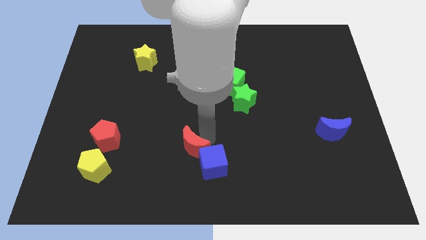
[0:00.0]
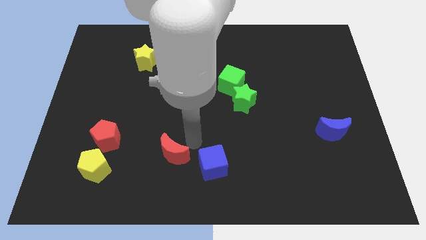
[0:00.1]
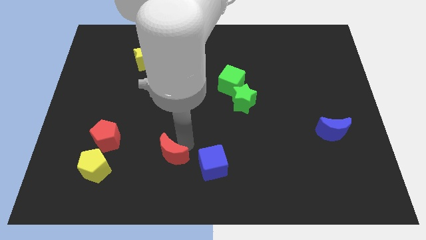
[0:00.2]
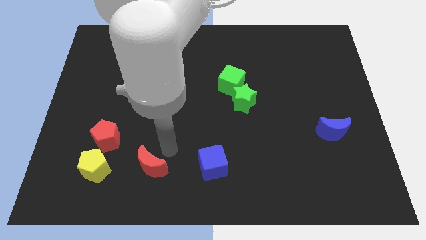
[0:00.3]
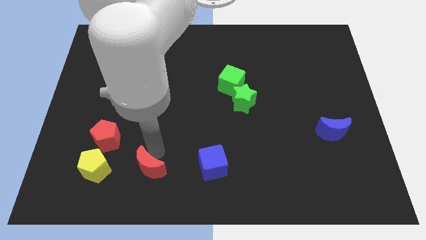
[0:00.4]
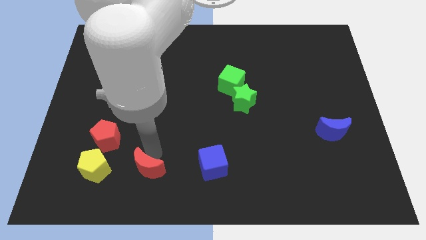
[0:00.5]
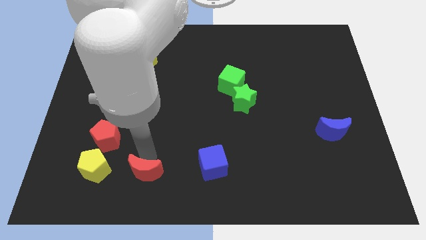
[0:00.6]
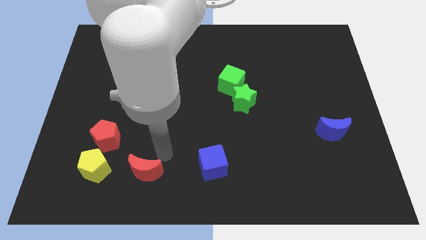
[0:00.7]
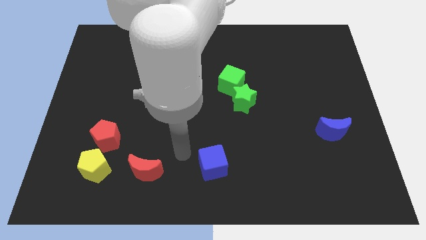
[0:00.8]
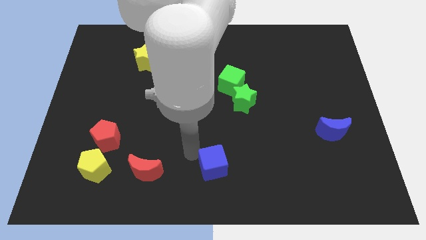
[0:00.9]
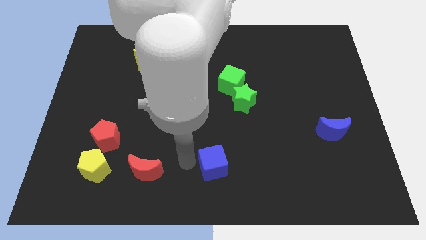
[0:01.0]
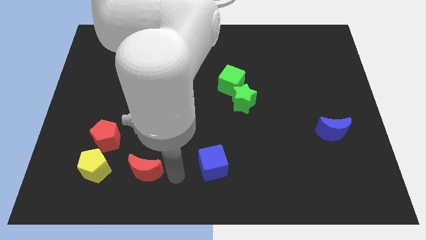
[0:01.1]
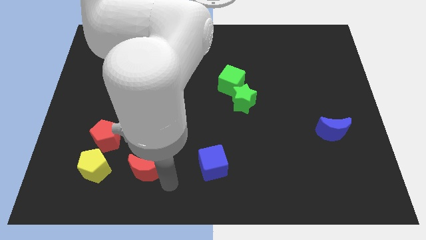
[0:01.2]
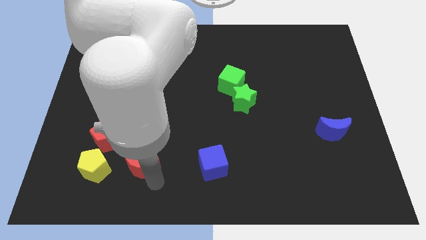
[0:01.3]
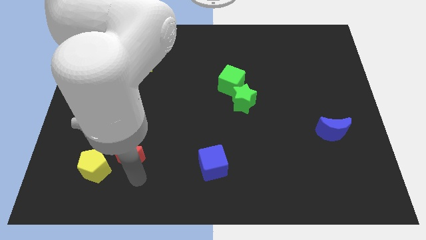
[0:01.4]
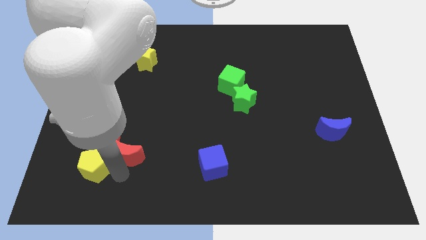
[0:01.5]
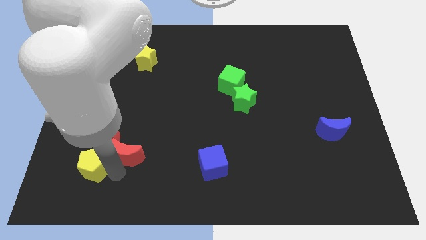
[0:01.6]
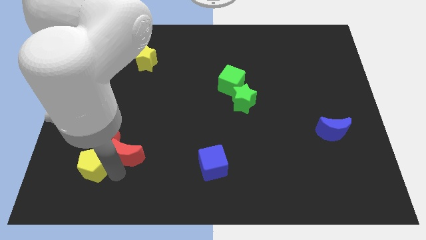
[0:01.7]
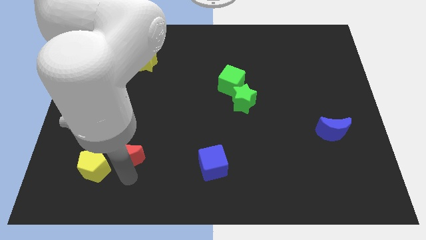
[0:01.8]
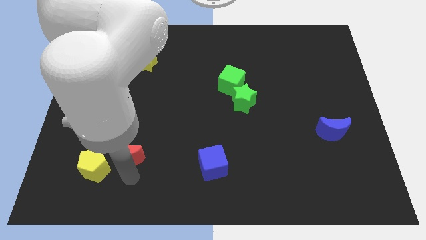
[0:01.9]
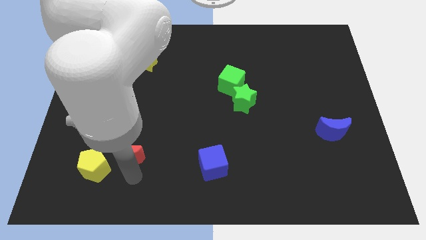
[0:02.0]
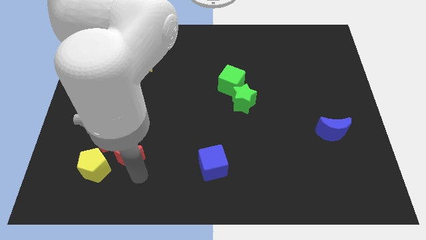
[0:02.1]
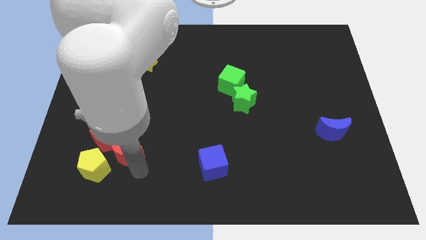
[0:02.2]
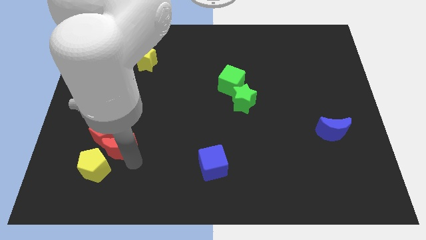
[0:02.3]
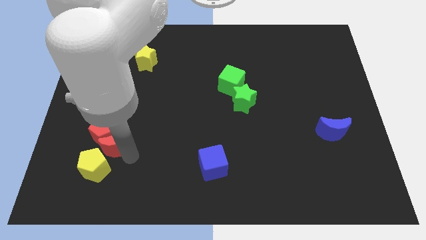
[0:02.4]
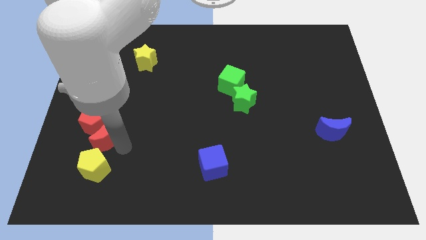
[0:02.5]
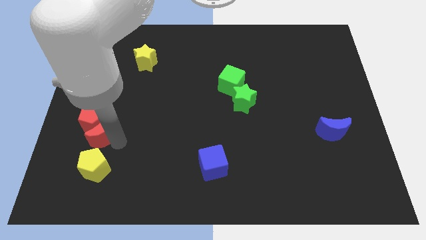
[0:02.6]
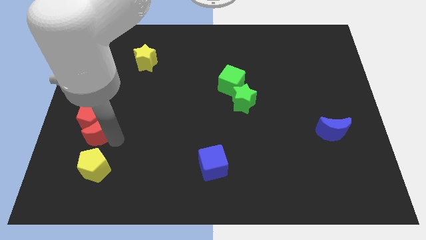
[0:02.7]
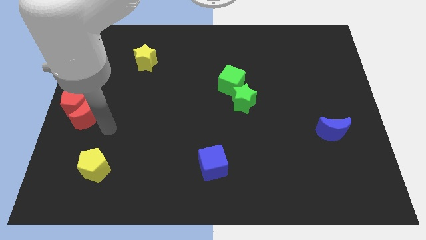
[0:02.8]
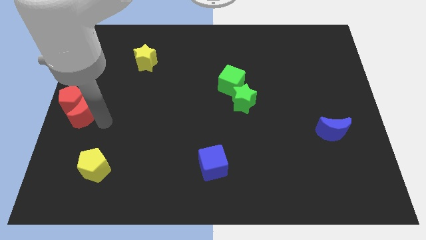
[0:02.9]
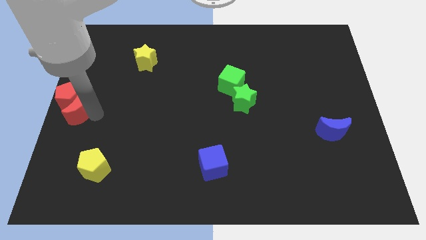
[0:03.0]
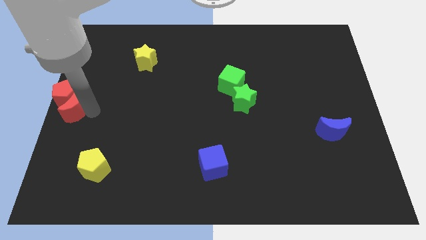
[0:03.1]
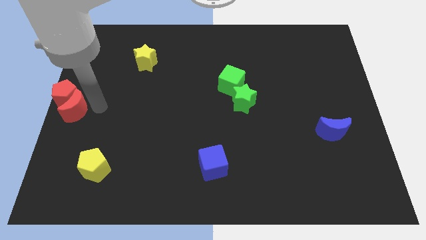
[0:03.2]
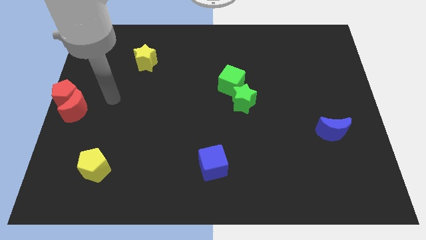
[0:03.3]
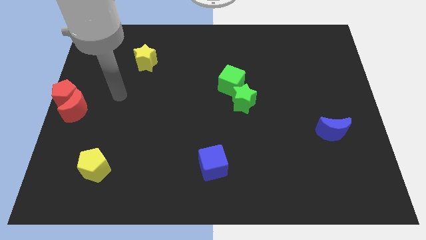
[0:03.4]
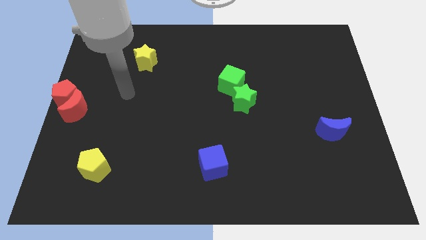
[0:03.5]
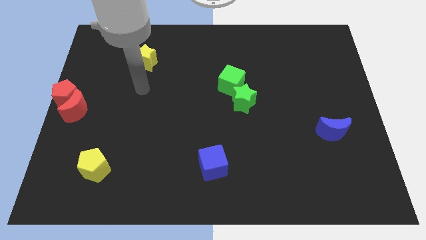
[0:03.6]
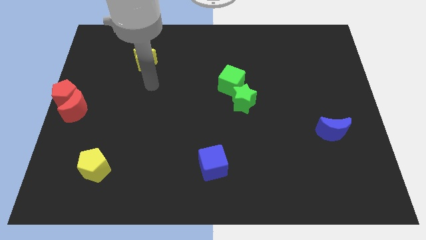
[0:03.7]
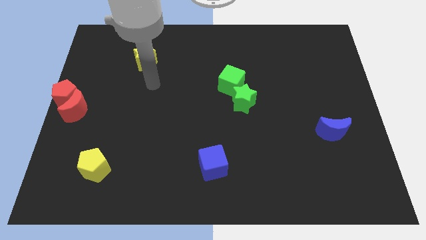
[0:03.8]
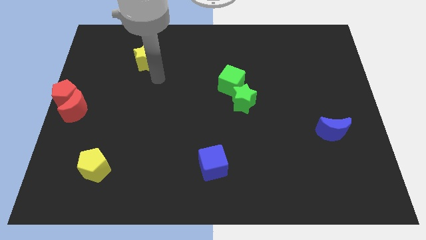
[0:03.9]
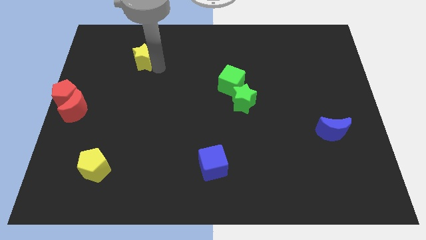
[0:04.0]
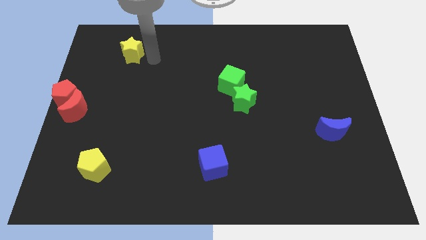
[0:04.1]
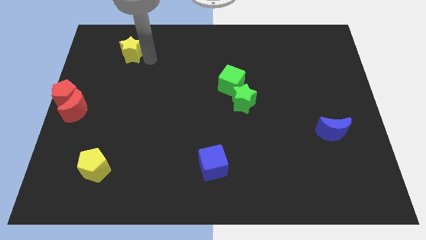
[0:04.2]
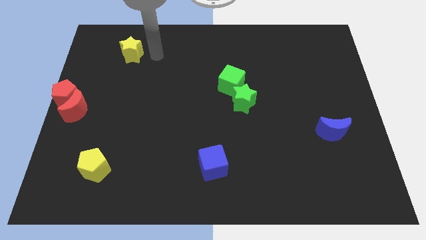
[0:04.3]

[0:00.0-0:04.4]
push the red pentagon and red crescent to the left center corner

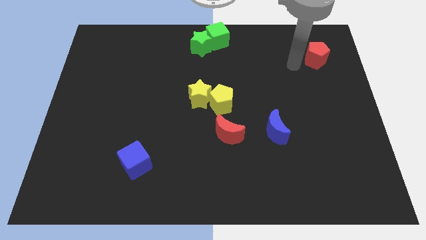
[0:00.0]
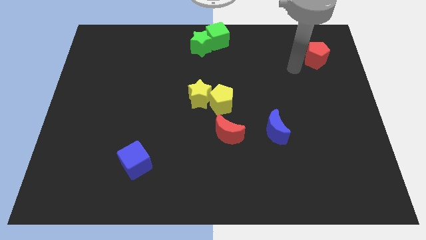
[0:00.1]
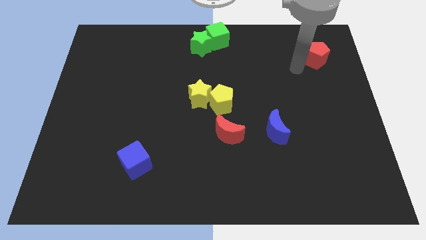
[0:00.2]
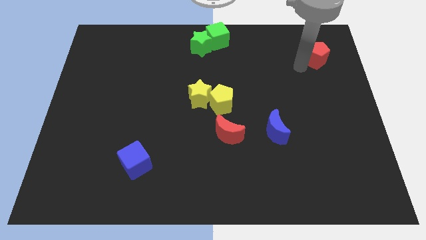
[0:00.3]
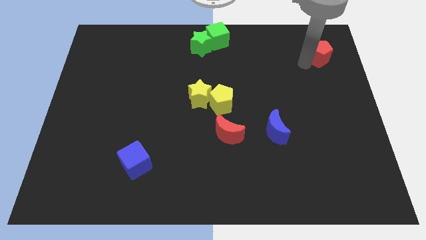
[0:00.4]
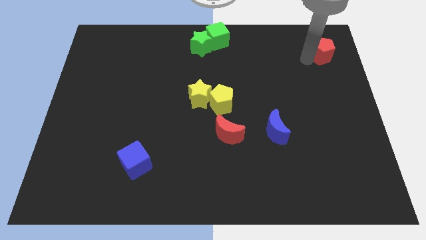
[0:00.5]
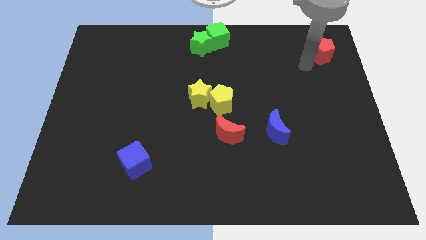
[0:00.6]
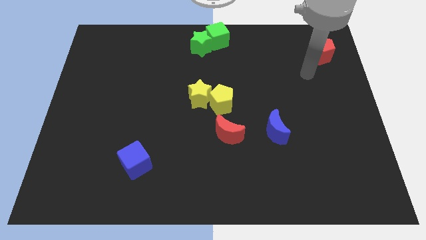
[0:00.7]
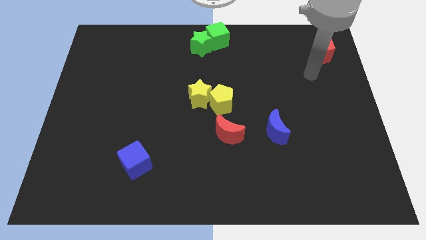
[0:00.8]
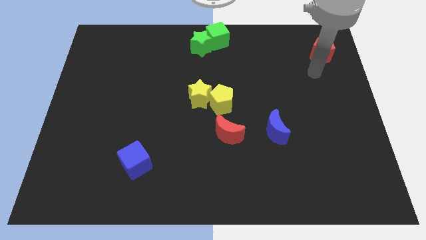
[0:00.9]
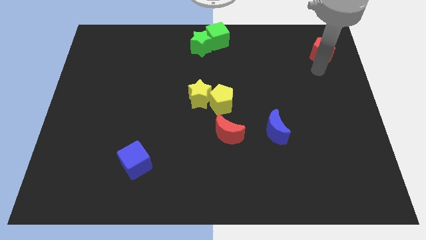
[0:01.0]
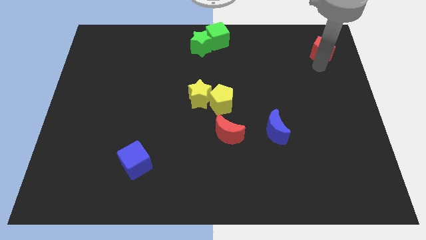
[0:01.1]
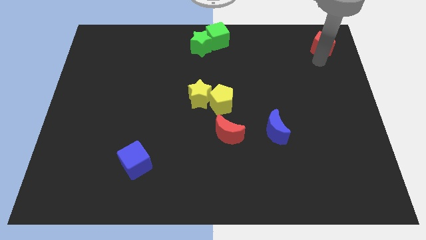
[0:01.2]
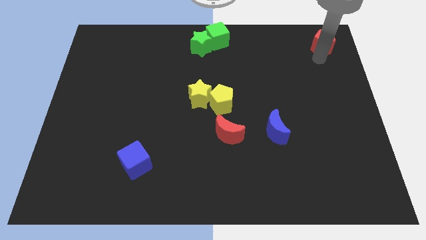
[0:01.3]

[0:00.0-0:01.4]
move red pentagon to the corner

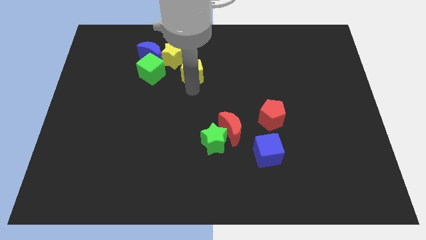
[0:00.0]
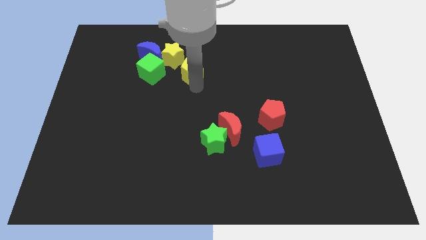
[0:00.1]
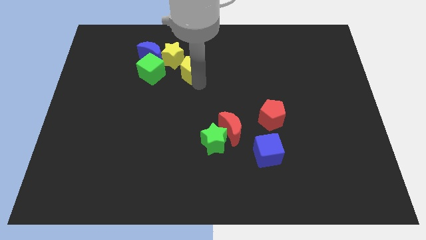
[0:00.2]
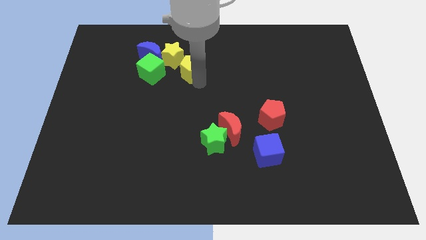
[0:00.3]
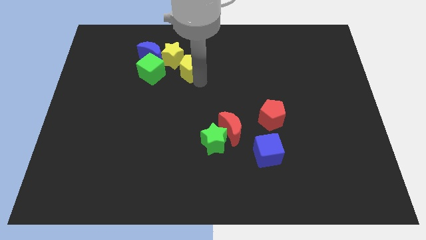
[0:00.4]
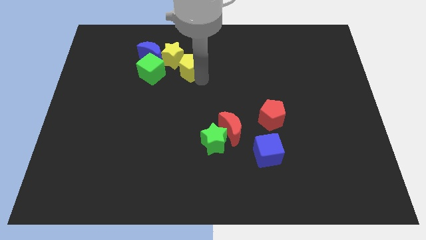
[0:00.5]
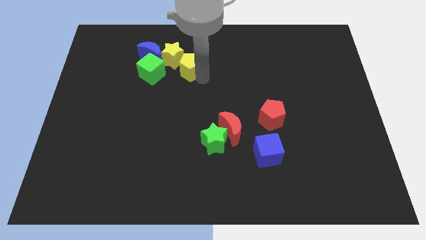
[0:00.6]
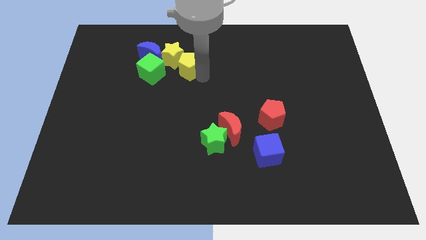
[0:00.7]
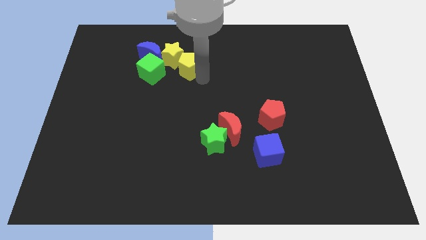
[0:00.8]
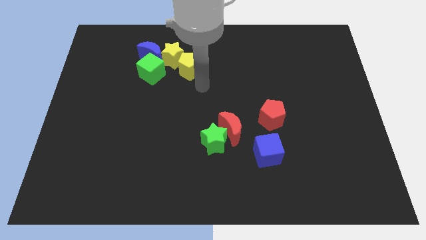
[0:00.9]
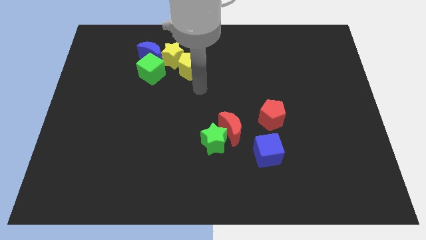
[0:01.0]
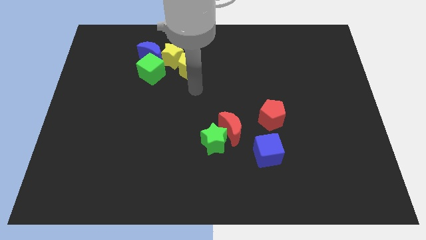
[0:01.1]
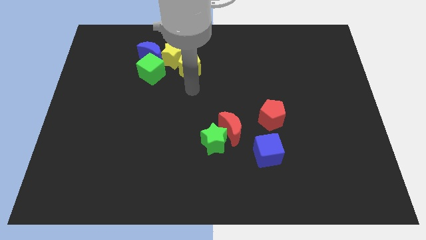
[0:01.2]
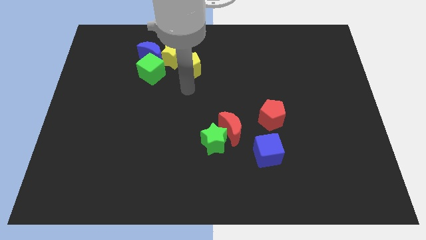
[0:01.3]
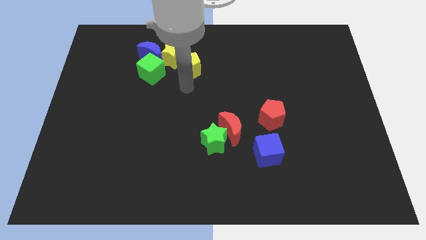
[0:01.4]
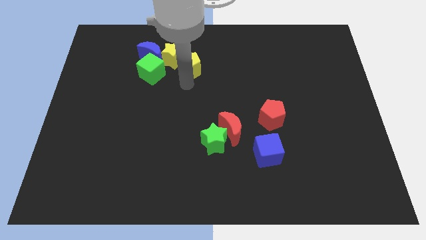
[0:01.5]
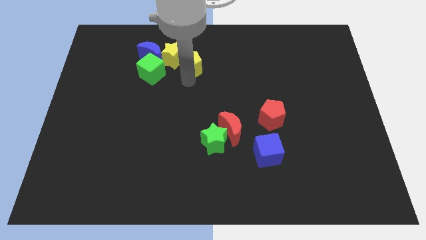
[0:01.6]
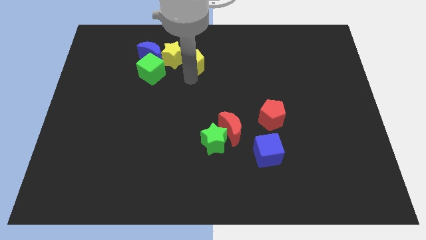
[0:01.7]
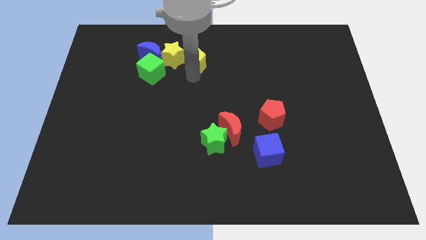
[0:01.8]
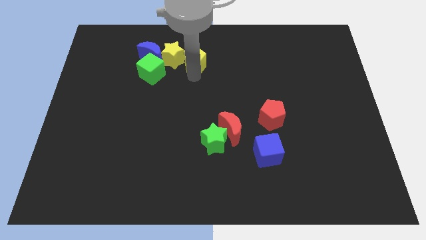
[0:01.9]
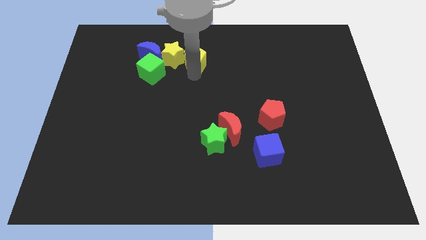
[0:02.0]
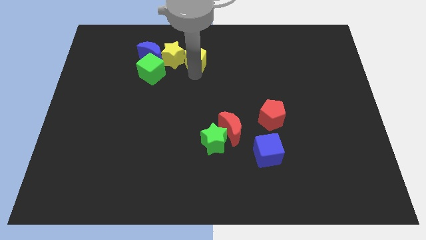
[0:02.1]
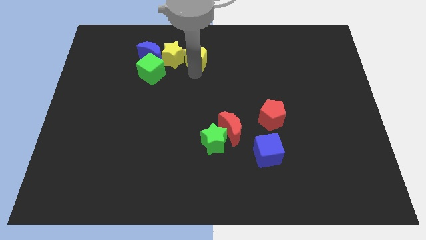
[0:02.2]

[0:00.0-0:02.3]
slightly move the yellow pentagon to the right side of the yellow star

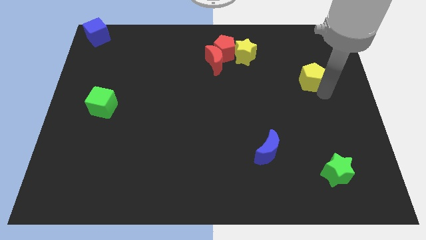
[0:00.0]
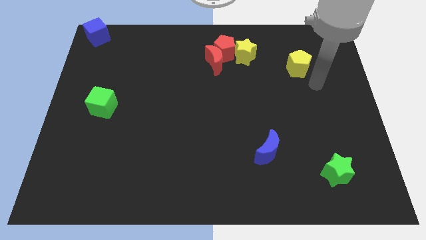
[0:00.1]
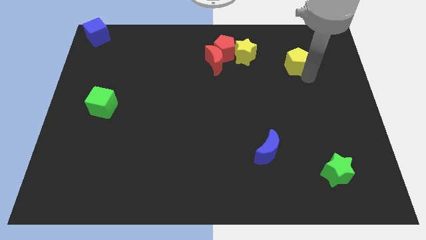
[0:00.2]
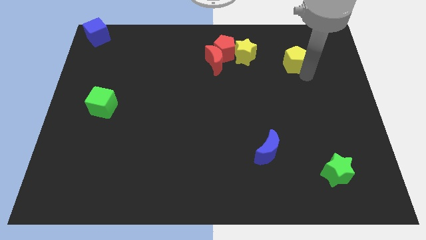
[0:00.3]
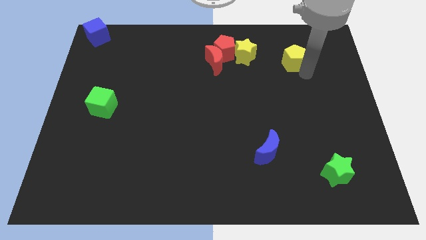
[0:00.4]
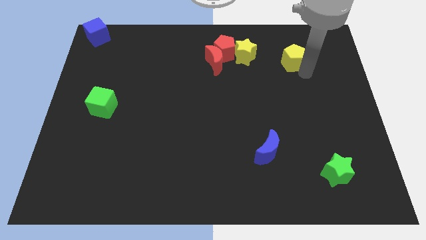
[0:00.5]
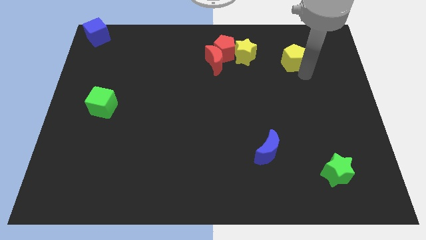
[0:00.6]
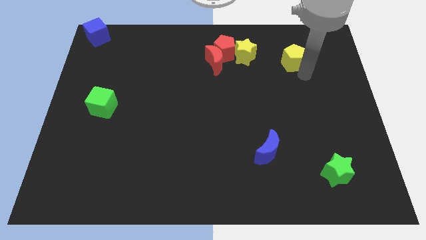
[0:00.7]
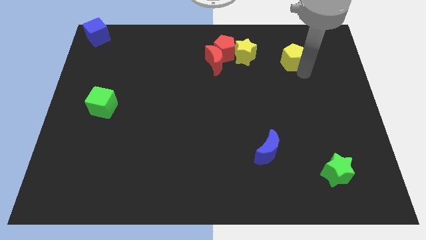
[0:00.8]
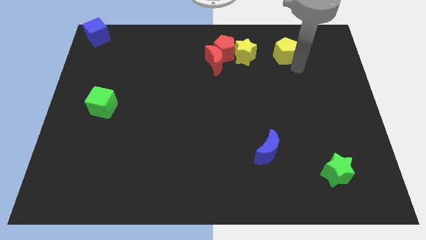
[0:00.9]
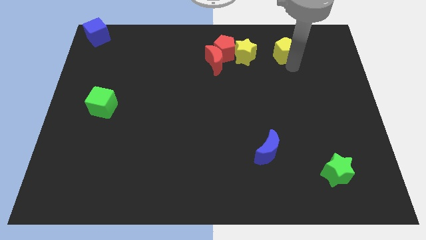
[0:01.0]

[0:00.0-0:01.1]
move the yellow pentagon parallel right to the yellow star
